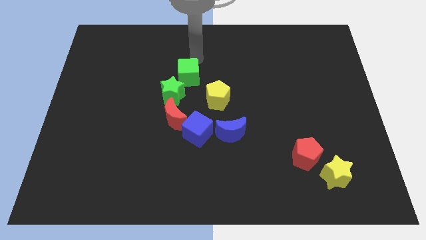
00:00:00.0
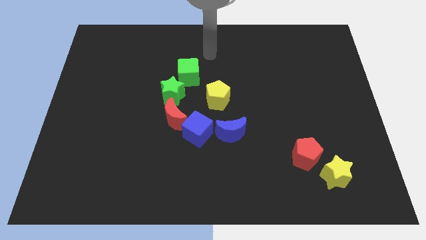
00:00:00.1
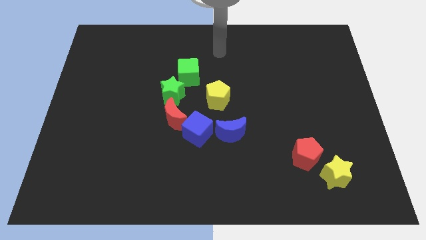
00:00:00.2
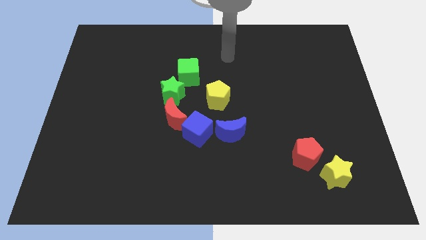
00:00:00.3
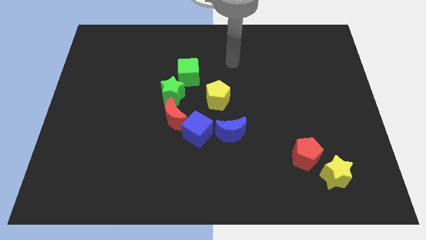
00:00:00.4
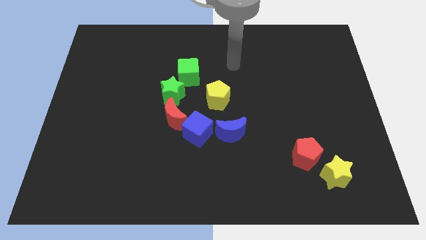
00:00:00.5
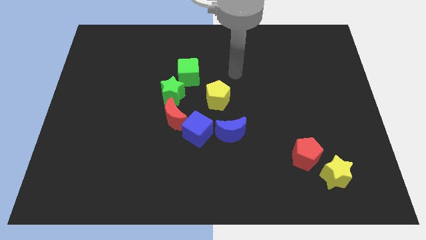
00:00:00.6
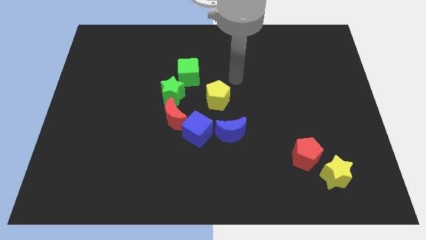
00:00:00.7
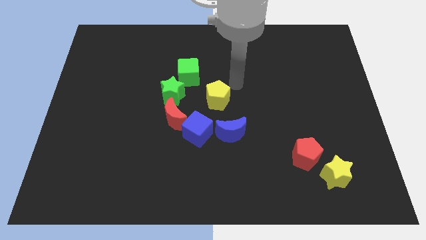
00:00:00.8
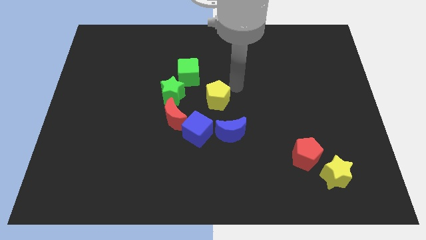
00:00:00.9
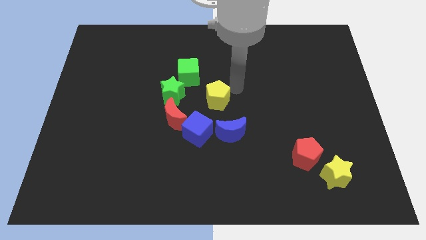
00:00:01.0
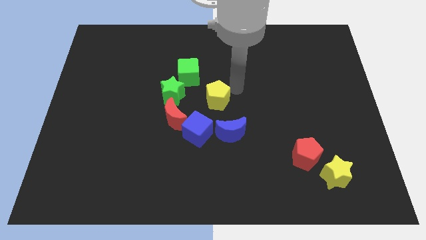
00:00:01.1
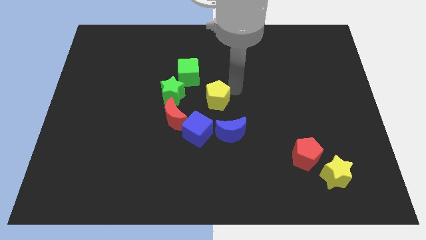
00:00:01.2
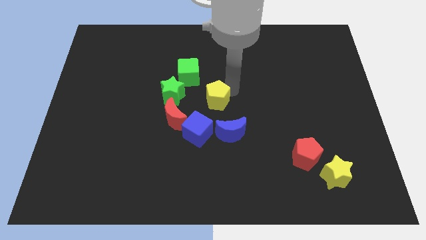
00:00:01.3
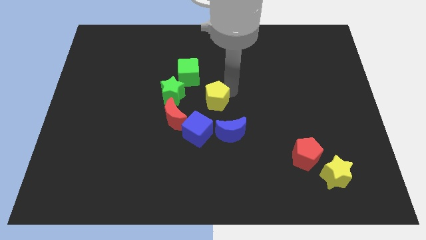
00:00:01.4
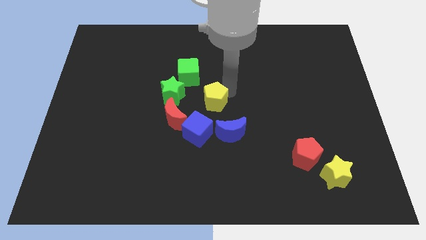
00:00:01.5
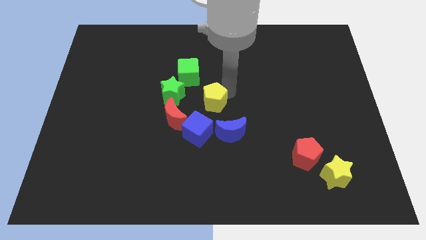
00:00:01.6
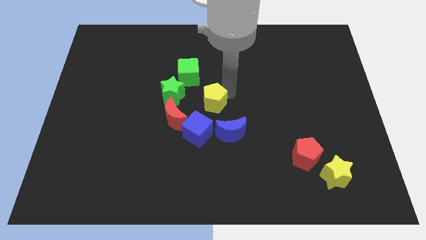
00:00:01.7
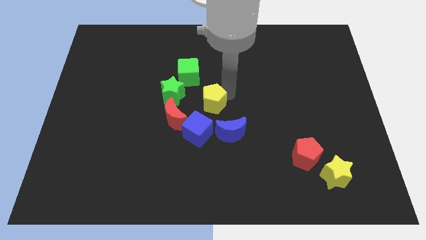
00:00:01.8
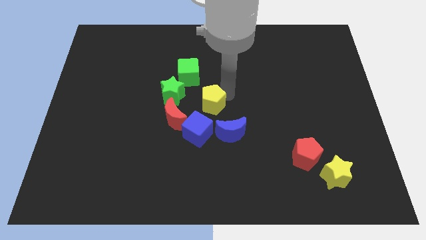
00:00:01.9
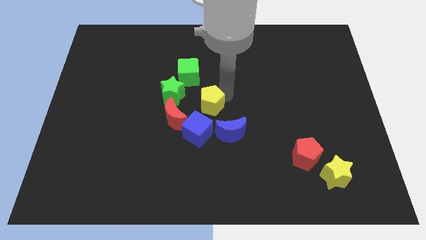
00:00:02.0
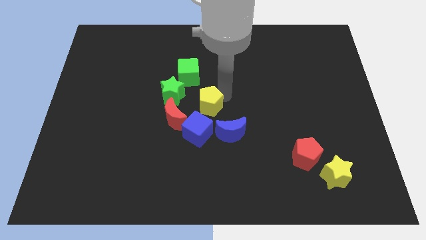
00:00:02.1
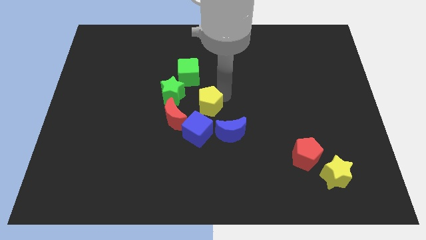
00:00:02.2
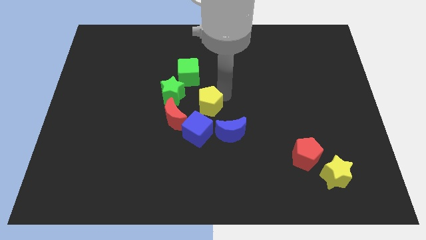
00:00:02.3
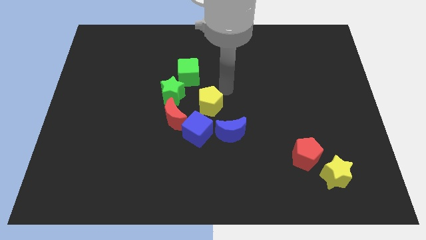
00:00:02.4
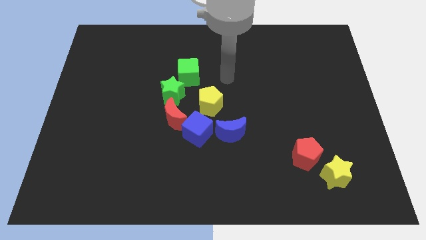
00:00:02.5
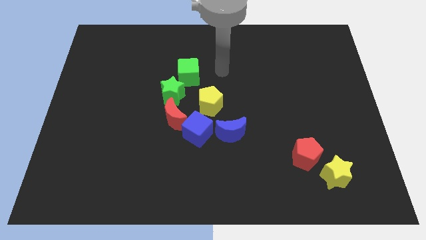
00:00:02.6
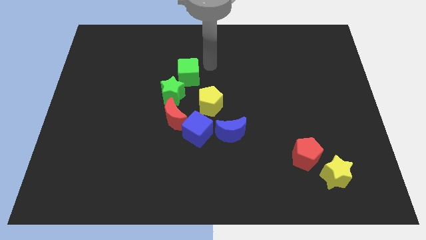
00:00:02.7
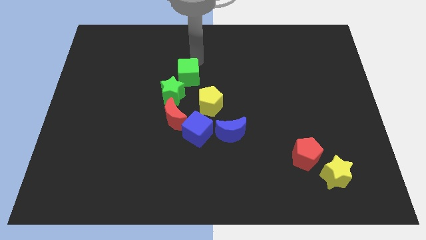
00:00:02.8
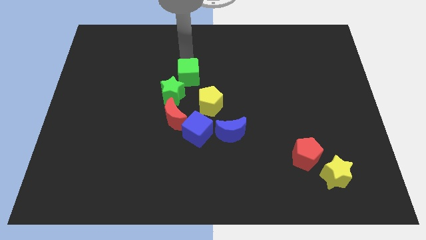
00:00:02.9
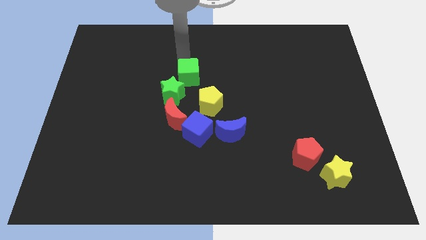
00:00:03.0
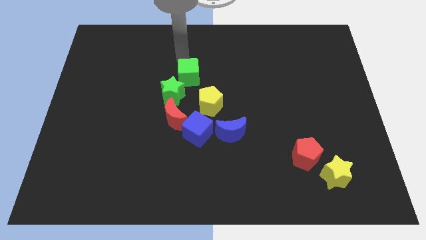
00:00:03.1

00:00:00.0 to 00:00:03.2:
push the yellow pentagon slightly towards the blue cube

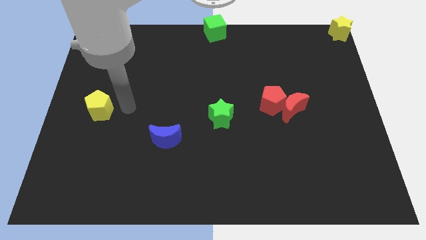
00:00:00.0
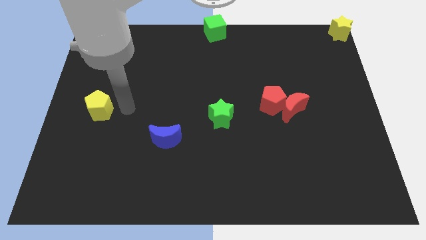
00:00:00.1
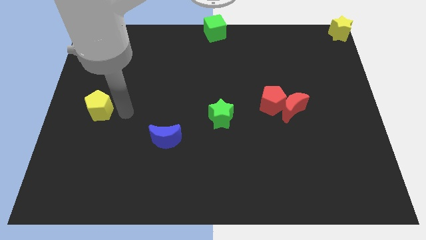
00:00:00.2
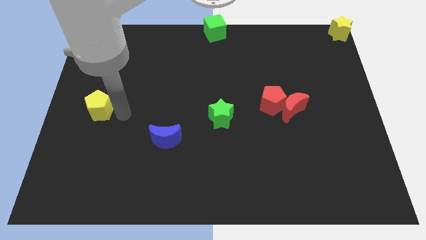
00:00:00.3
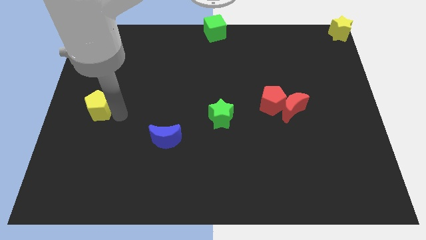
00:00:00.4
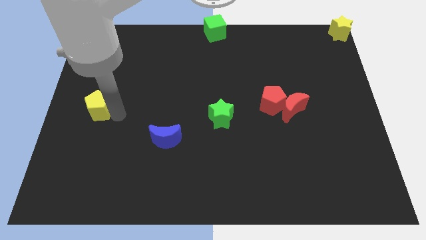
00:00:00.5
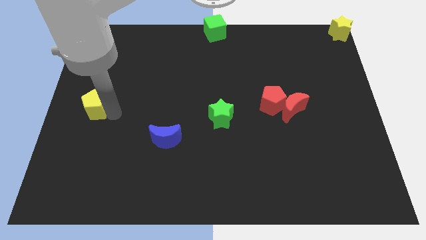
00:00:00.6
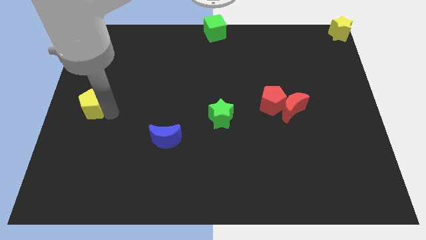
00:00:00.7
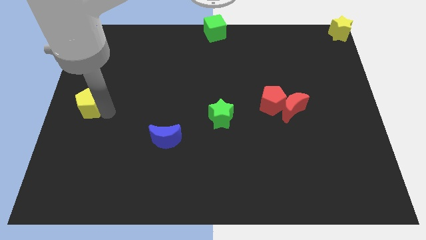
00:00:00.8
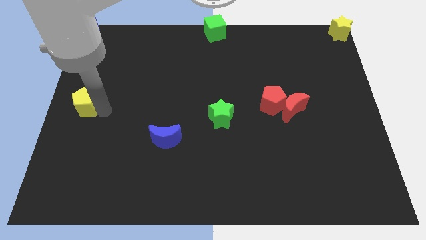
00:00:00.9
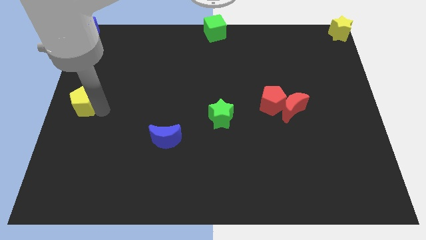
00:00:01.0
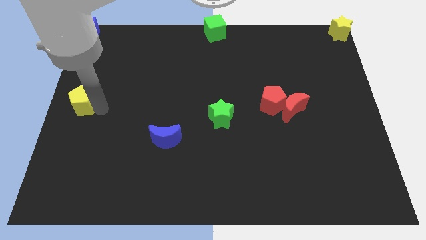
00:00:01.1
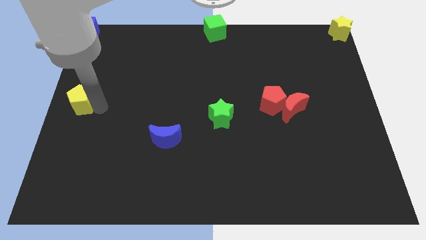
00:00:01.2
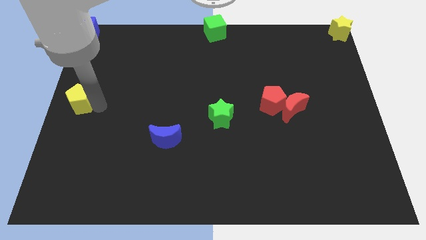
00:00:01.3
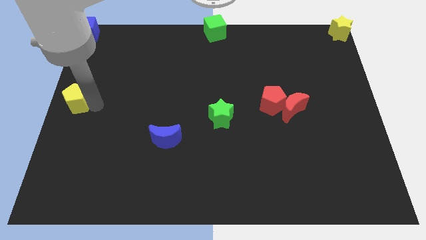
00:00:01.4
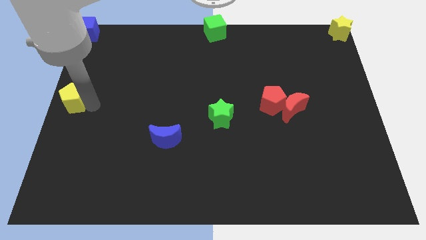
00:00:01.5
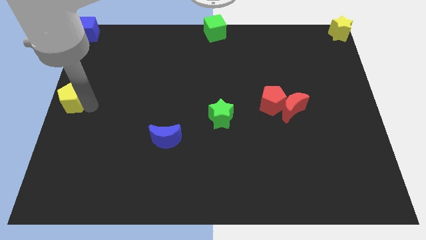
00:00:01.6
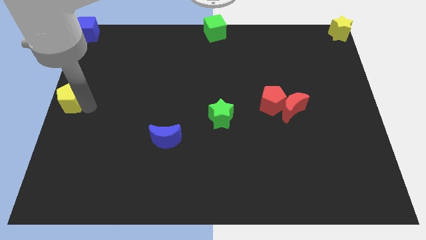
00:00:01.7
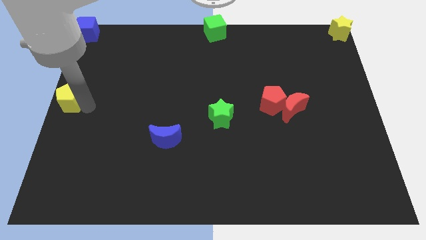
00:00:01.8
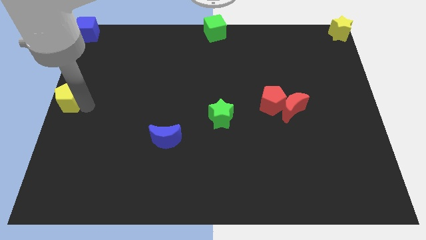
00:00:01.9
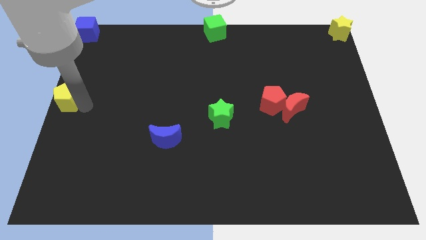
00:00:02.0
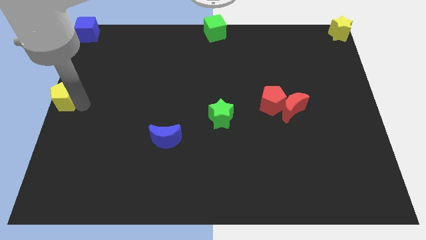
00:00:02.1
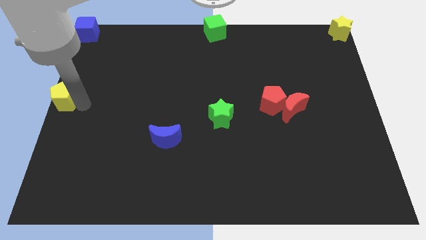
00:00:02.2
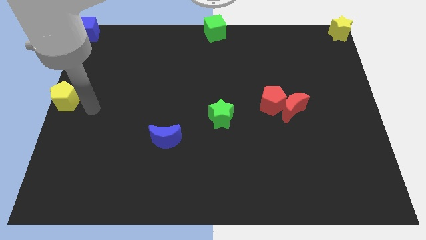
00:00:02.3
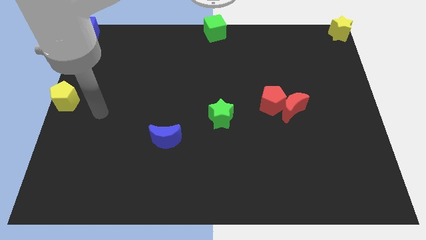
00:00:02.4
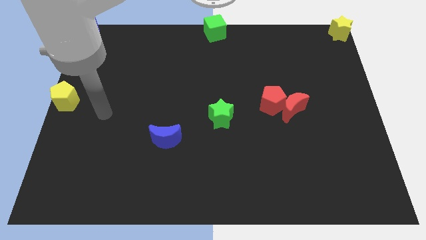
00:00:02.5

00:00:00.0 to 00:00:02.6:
place the yellow pentagon at the left center of the board

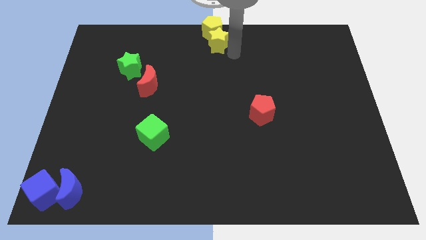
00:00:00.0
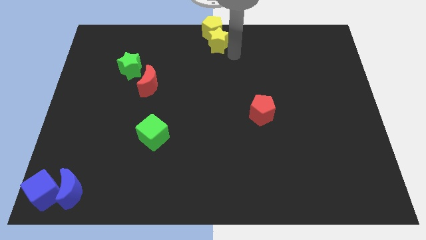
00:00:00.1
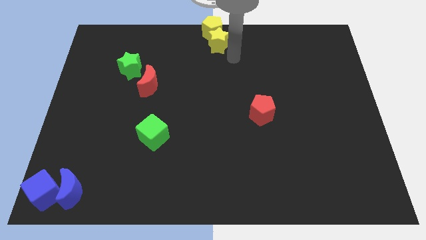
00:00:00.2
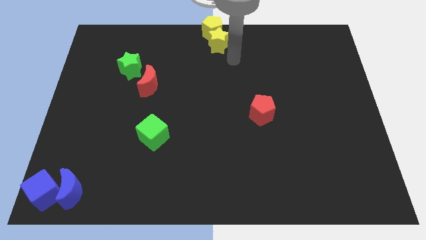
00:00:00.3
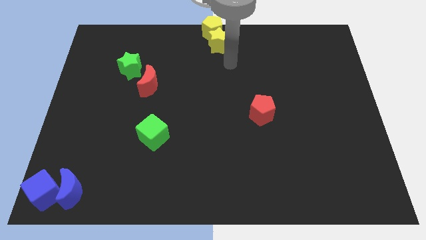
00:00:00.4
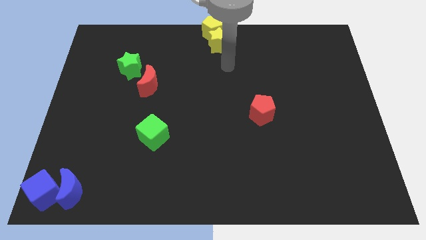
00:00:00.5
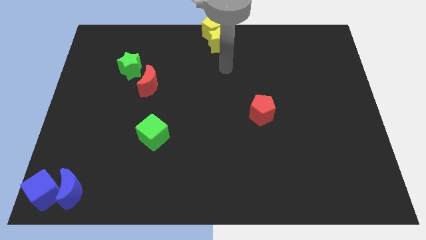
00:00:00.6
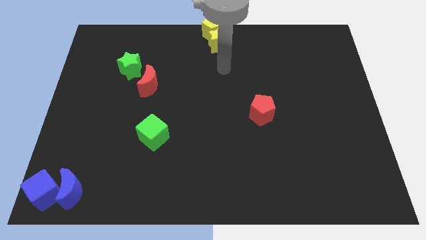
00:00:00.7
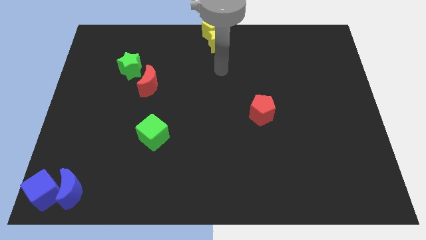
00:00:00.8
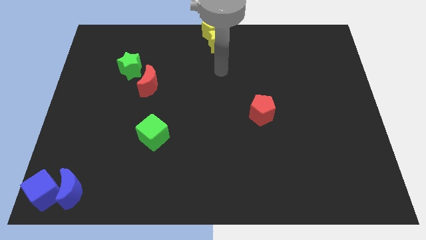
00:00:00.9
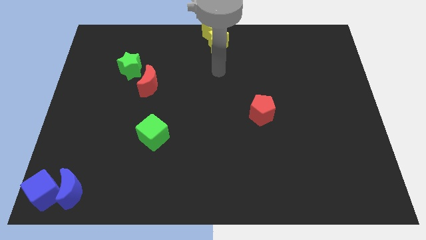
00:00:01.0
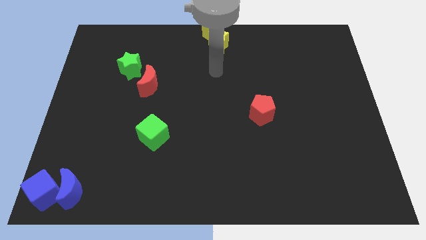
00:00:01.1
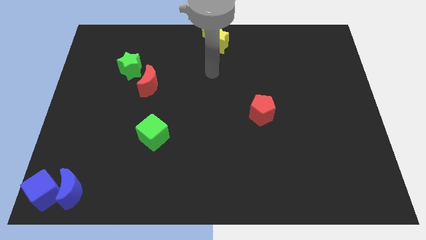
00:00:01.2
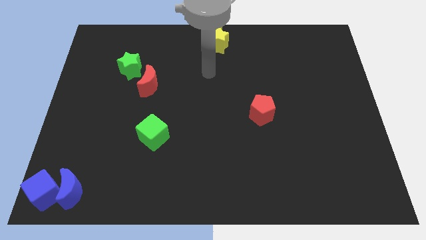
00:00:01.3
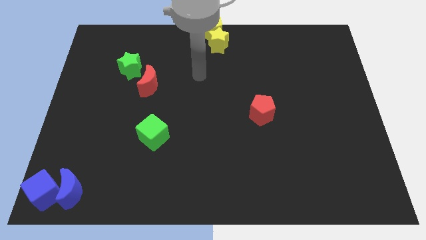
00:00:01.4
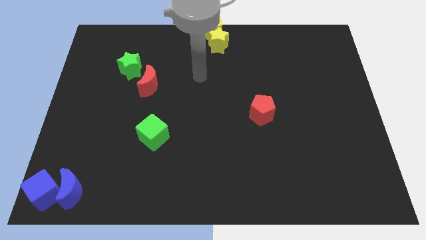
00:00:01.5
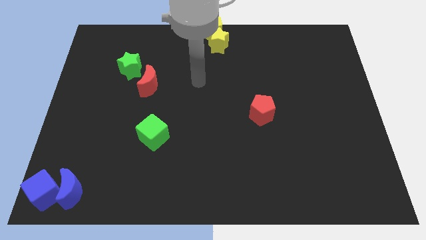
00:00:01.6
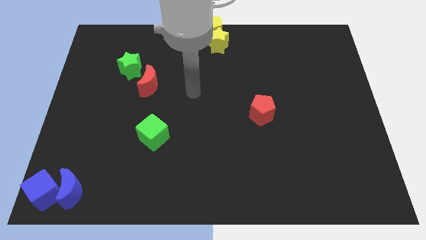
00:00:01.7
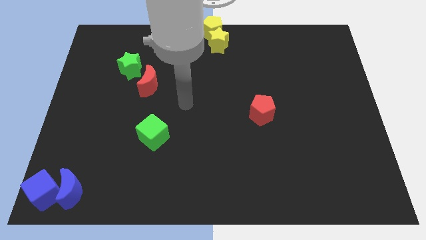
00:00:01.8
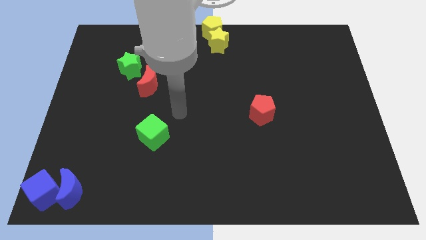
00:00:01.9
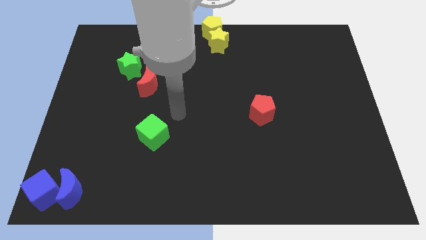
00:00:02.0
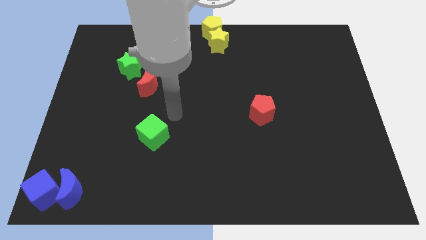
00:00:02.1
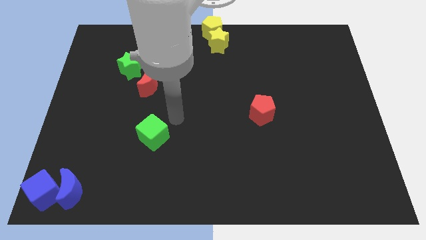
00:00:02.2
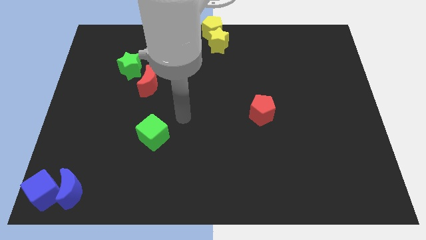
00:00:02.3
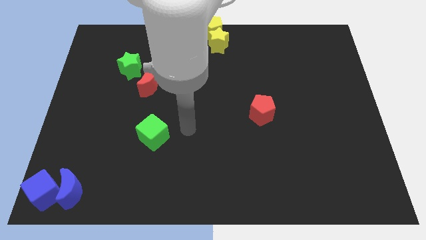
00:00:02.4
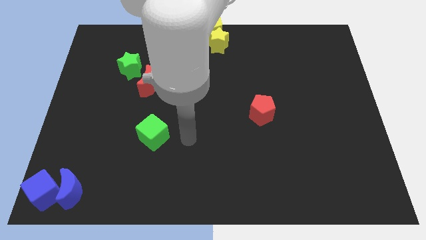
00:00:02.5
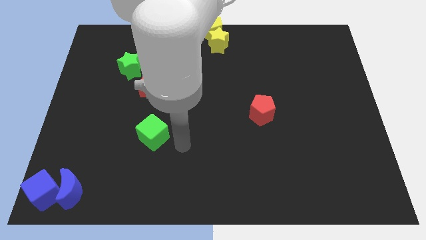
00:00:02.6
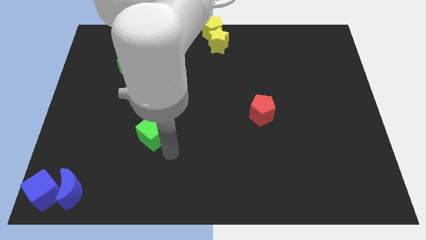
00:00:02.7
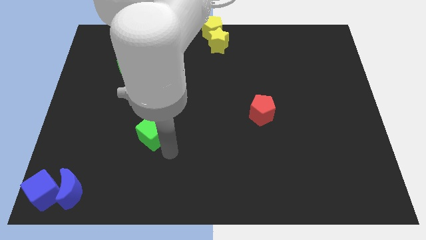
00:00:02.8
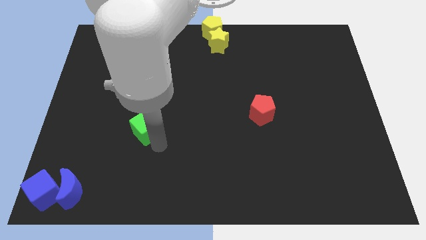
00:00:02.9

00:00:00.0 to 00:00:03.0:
move the arm below to the green cube

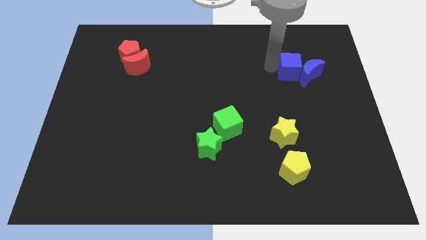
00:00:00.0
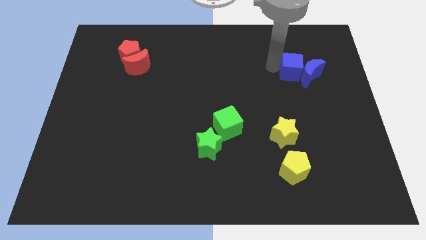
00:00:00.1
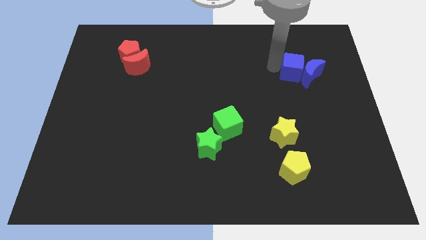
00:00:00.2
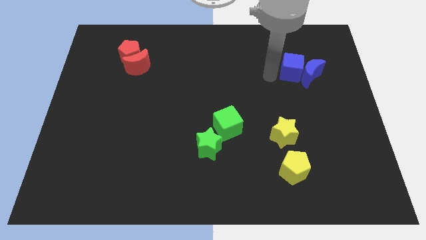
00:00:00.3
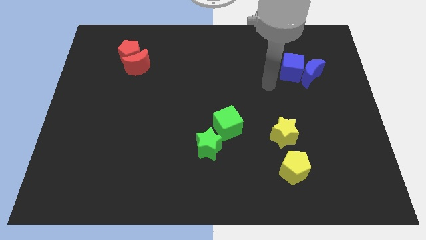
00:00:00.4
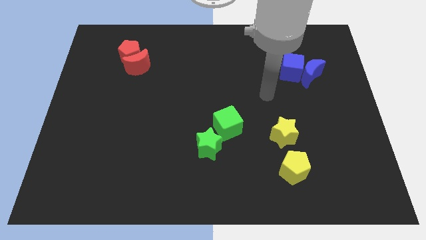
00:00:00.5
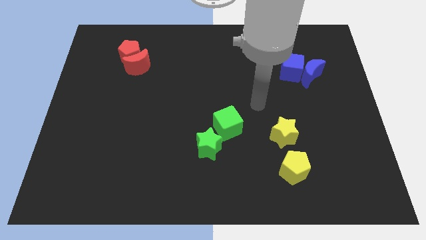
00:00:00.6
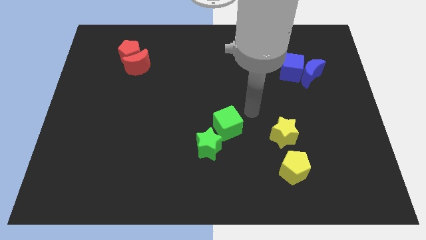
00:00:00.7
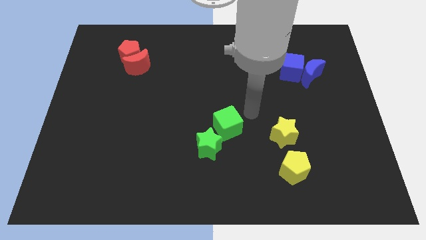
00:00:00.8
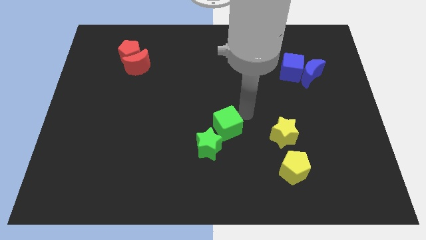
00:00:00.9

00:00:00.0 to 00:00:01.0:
go away from the blue moon
